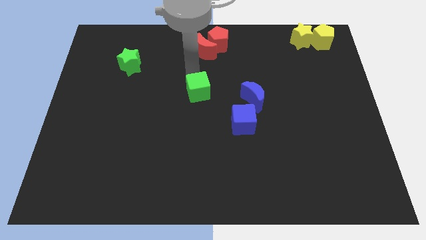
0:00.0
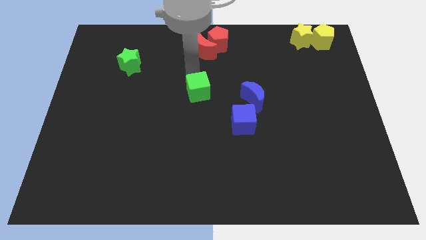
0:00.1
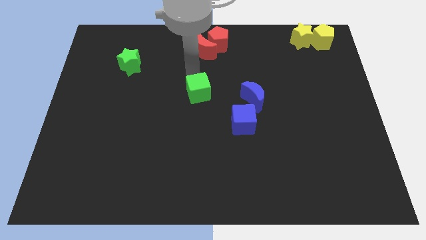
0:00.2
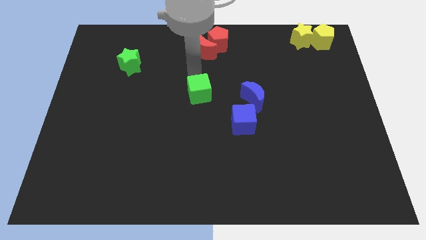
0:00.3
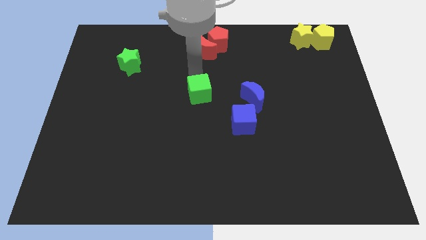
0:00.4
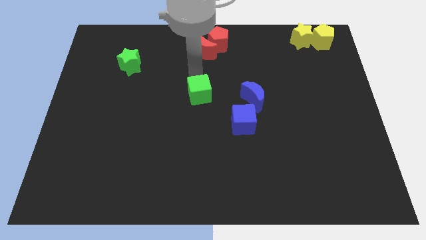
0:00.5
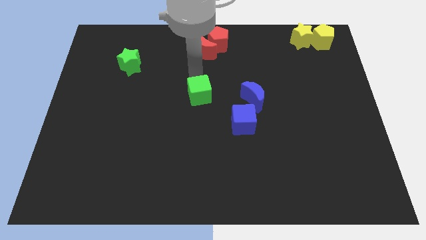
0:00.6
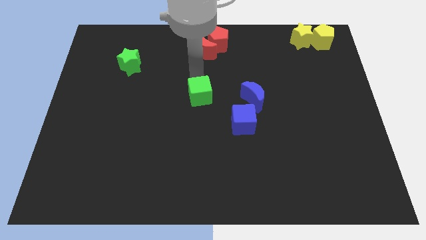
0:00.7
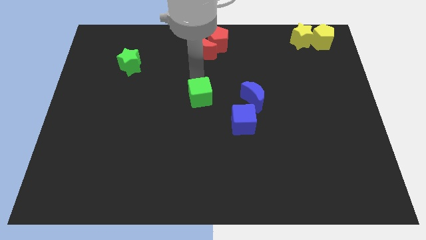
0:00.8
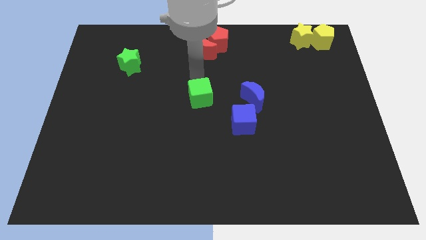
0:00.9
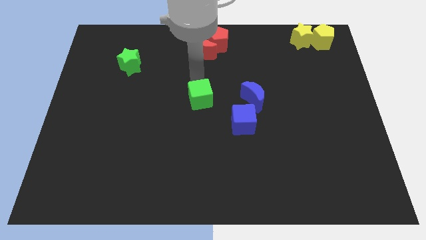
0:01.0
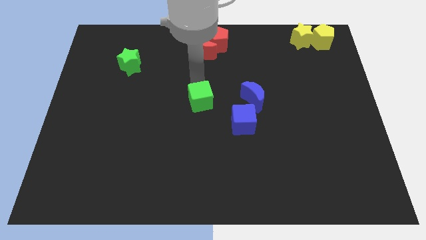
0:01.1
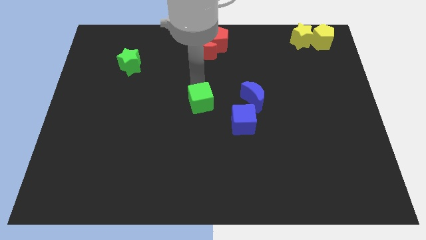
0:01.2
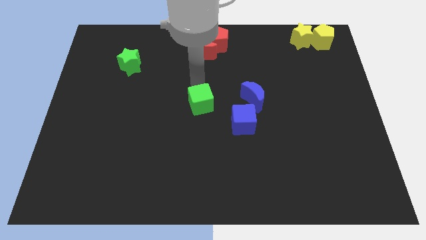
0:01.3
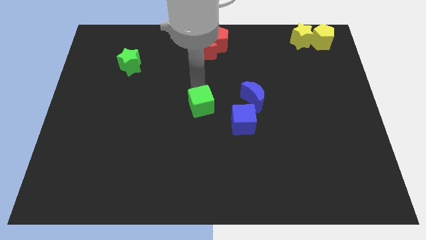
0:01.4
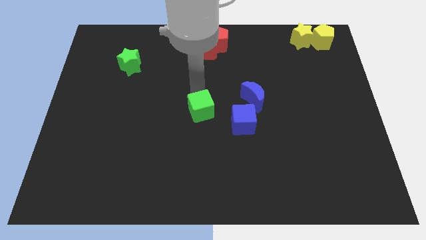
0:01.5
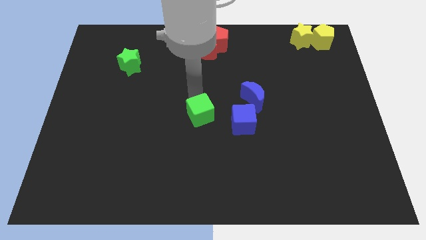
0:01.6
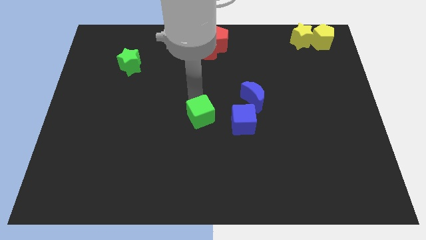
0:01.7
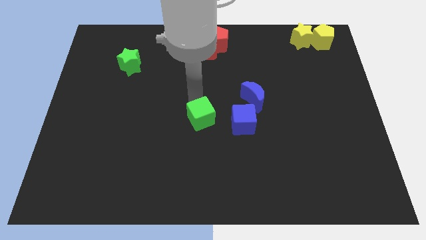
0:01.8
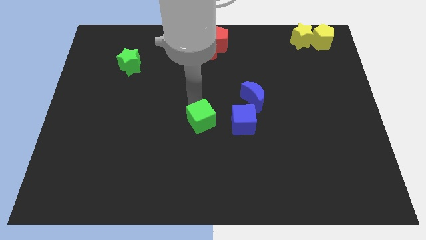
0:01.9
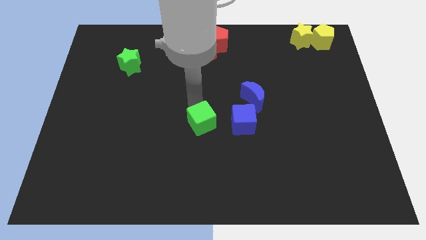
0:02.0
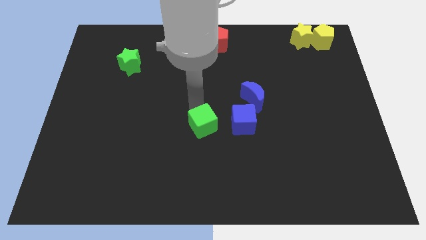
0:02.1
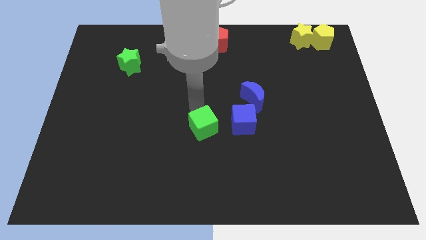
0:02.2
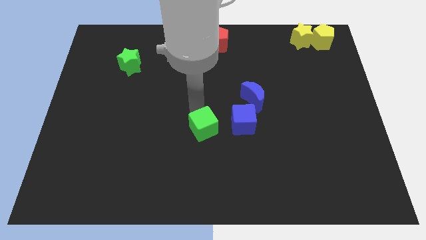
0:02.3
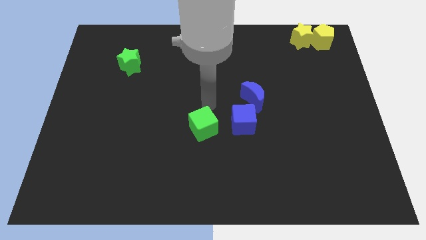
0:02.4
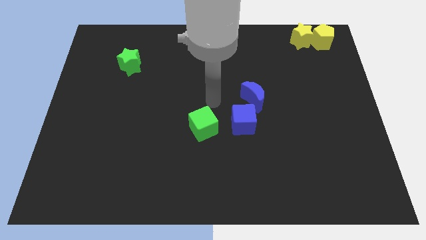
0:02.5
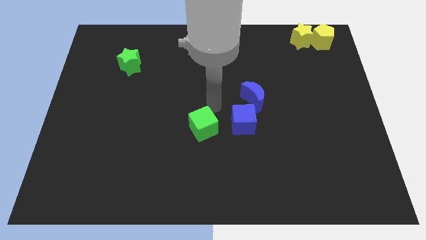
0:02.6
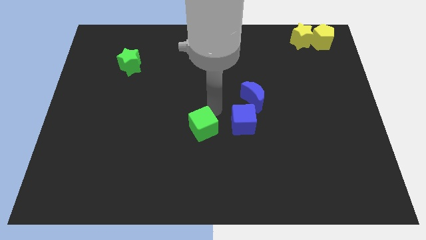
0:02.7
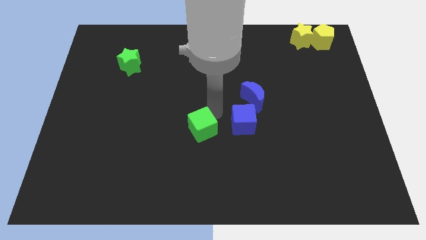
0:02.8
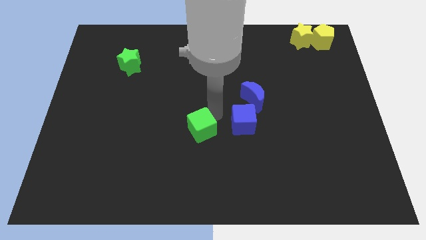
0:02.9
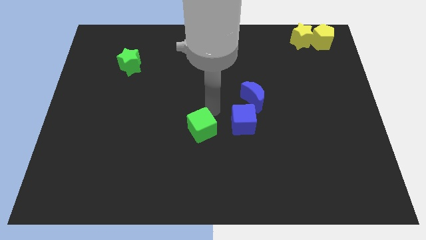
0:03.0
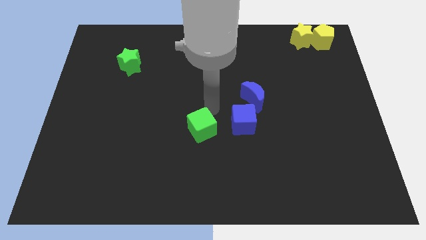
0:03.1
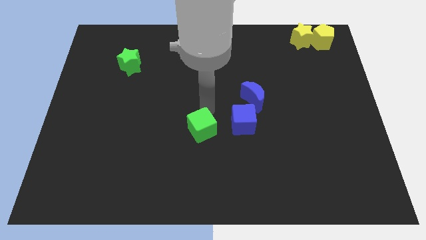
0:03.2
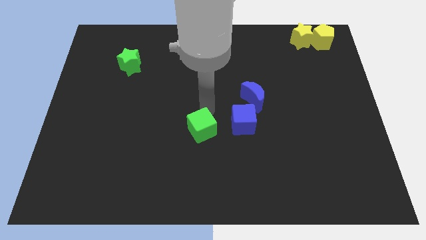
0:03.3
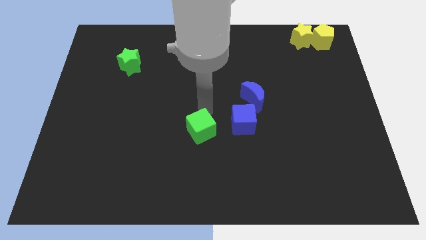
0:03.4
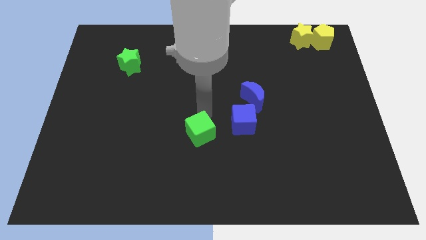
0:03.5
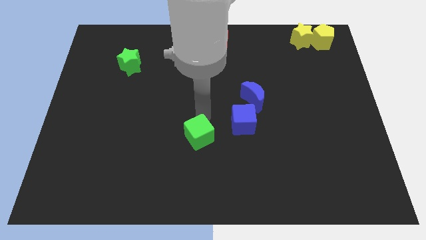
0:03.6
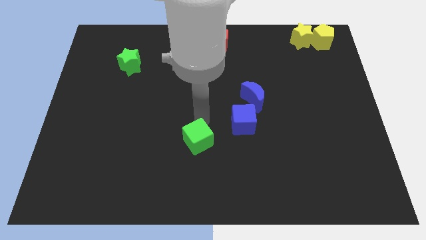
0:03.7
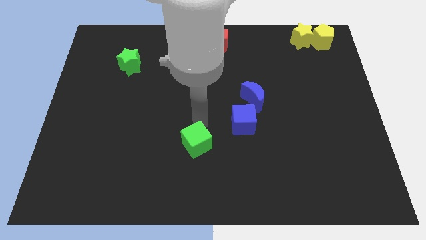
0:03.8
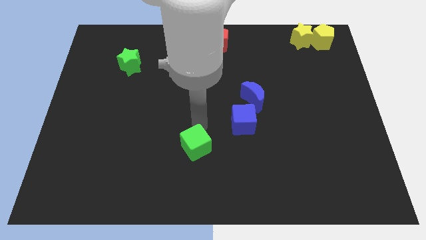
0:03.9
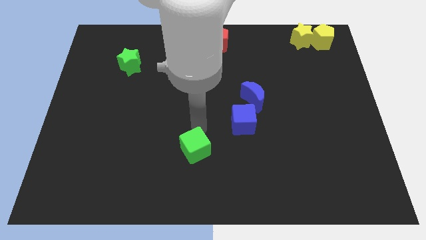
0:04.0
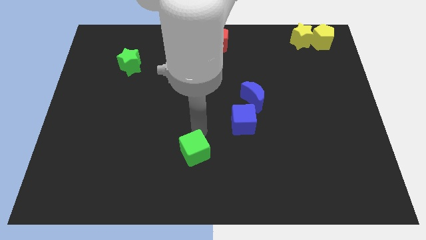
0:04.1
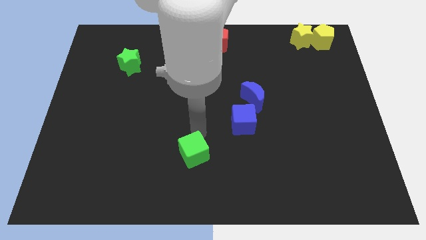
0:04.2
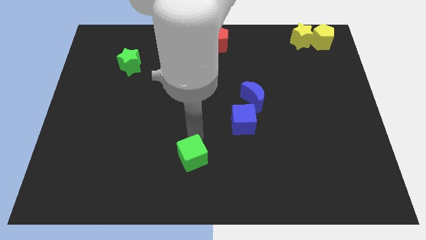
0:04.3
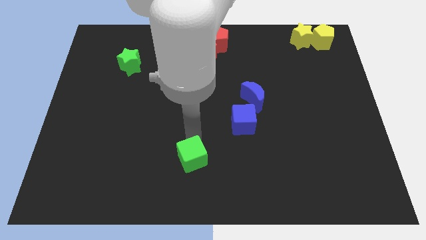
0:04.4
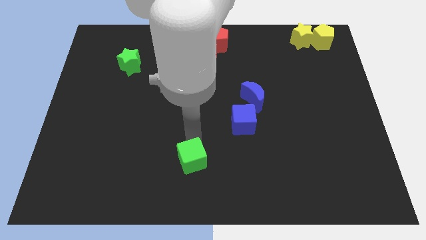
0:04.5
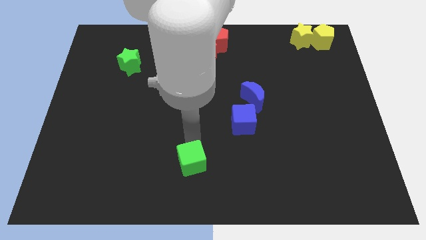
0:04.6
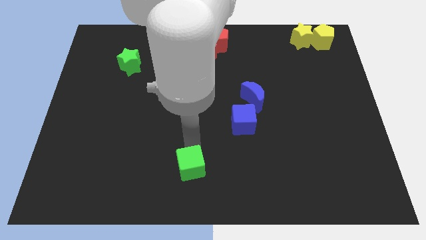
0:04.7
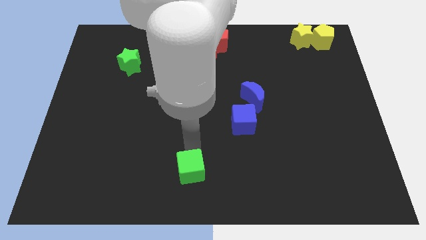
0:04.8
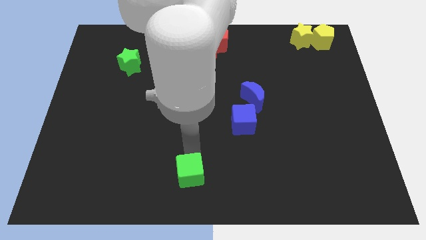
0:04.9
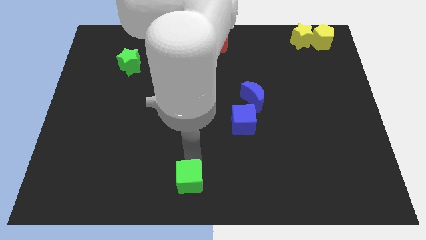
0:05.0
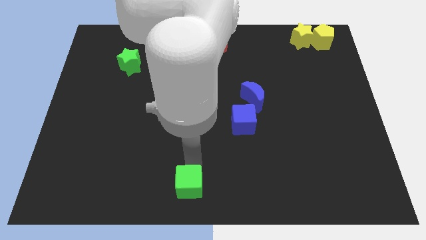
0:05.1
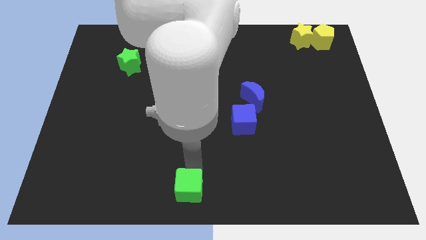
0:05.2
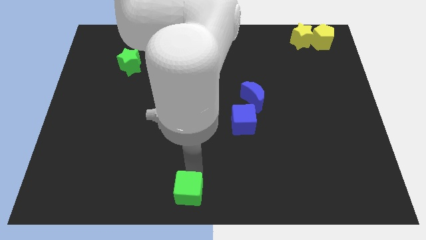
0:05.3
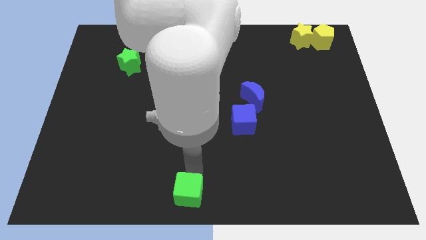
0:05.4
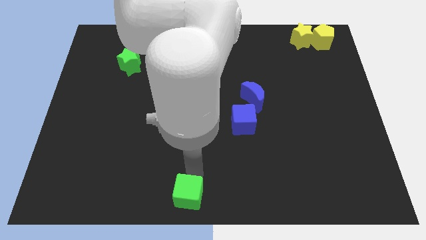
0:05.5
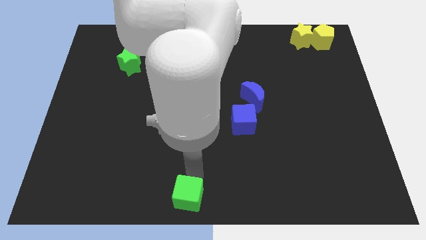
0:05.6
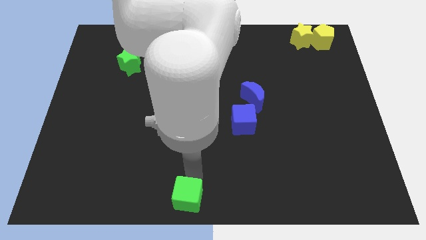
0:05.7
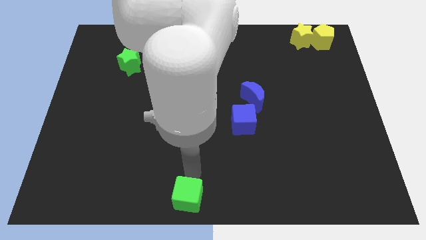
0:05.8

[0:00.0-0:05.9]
place the green cube at the bottom center

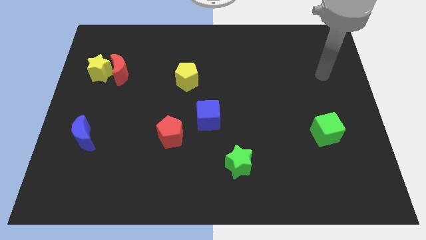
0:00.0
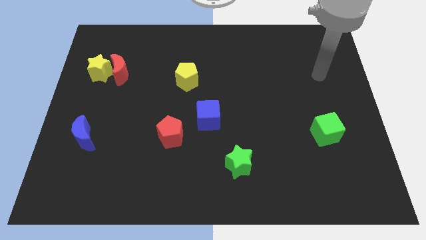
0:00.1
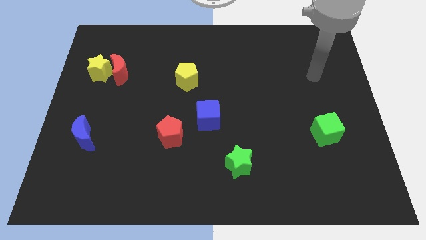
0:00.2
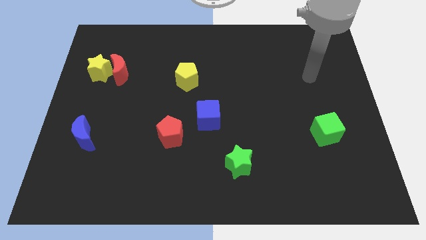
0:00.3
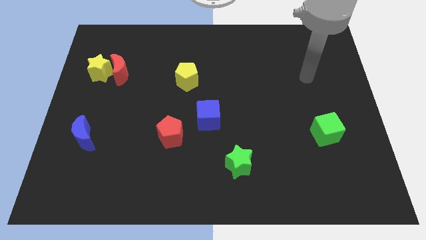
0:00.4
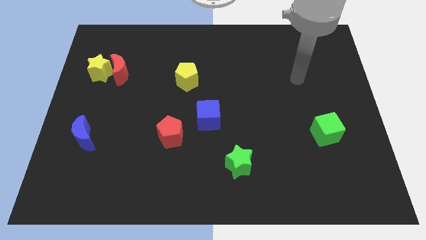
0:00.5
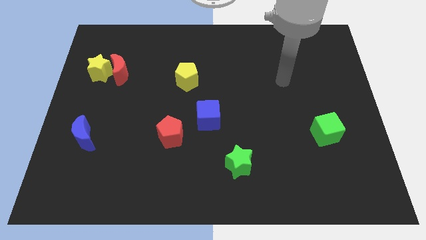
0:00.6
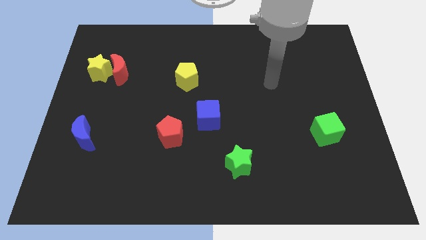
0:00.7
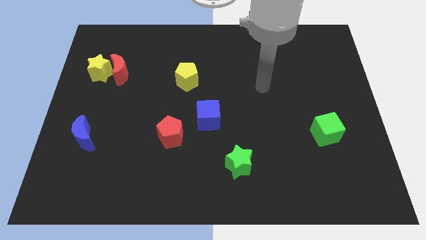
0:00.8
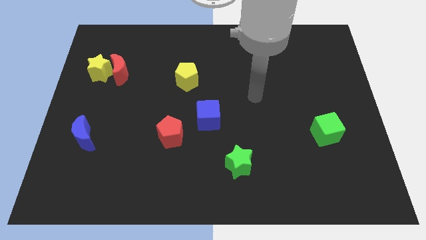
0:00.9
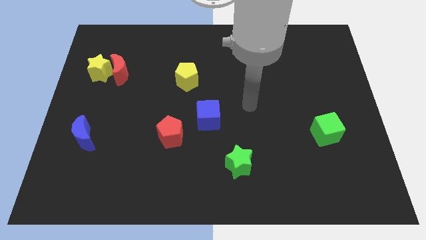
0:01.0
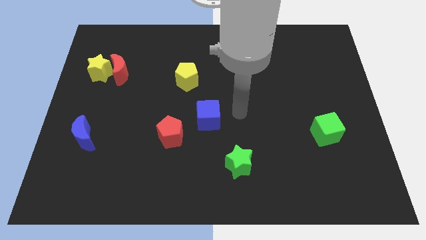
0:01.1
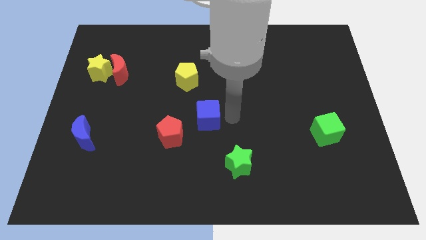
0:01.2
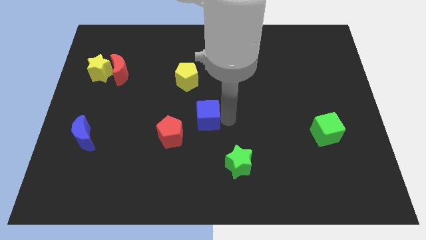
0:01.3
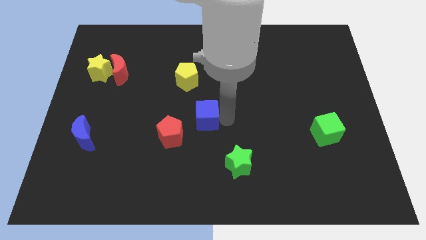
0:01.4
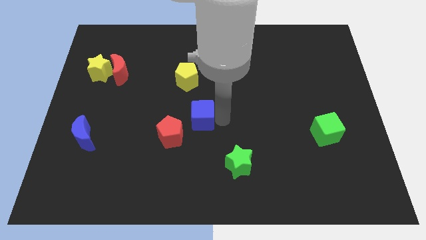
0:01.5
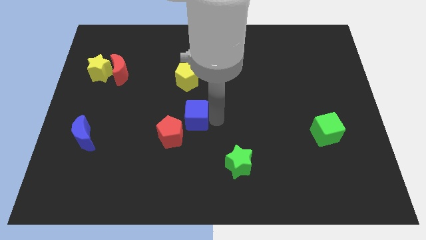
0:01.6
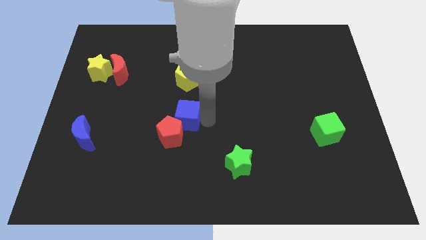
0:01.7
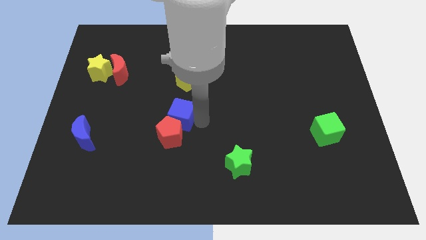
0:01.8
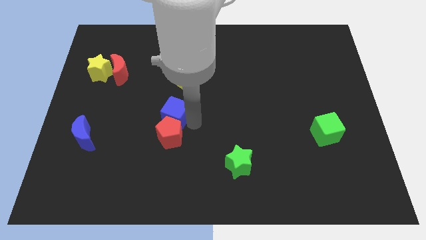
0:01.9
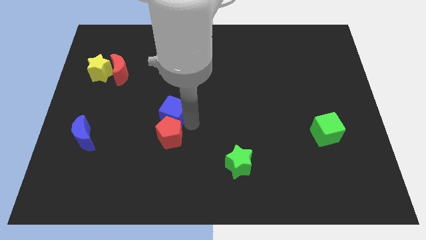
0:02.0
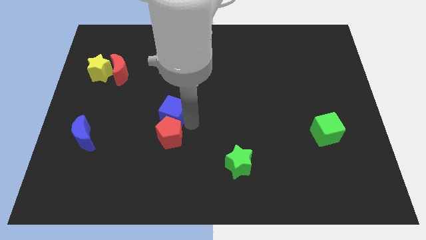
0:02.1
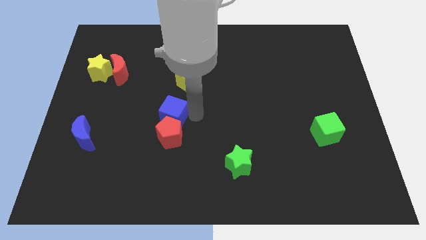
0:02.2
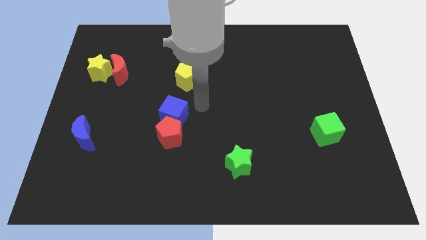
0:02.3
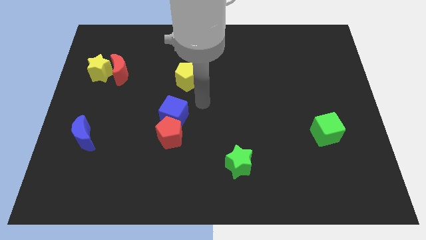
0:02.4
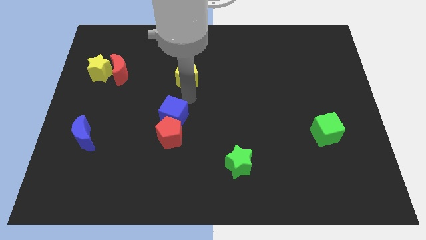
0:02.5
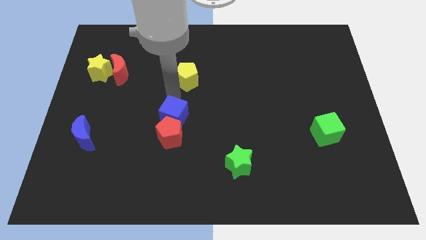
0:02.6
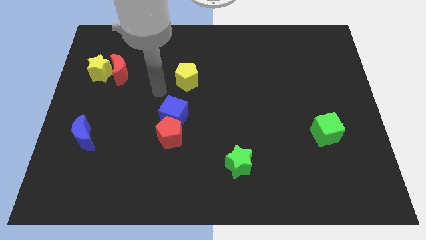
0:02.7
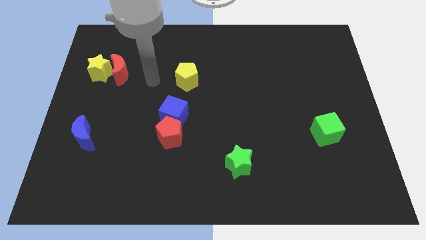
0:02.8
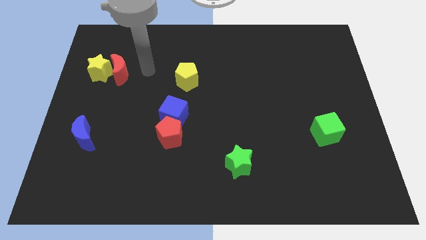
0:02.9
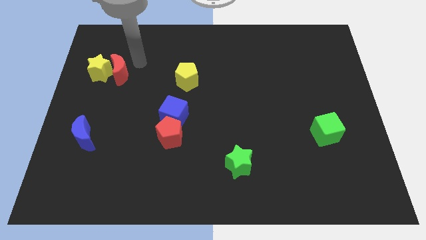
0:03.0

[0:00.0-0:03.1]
place the blue cube on the top of the red pentagon
